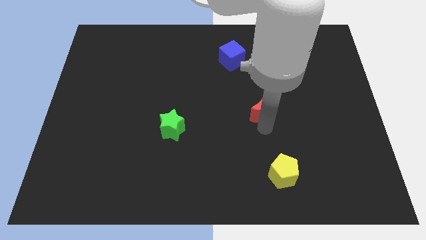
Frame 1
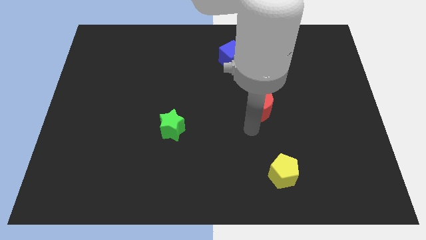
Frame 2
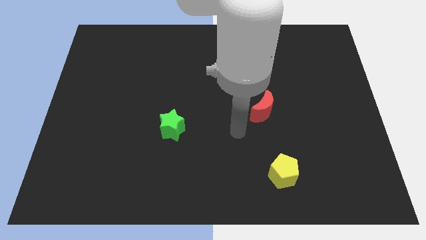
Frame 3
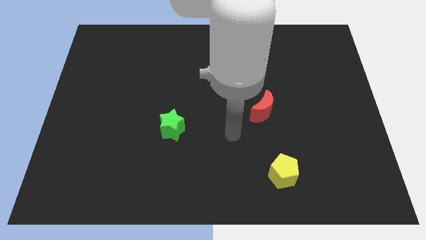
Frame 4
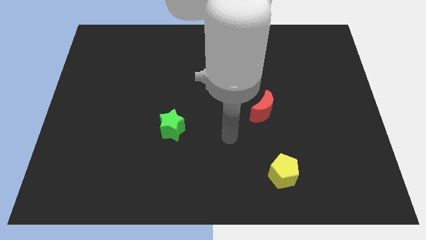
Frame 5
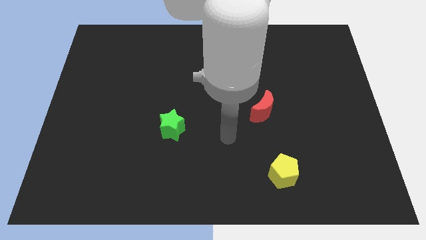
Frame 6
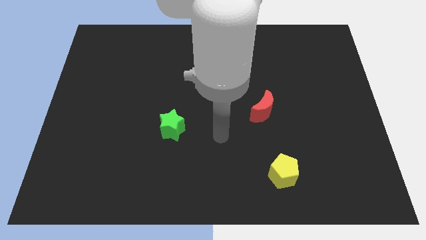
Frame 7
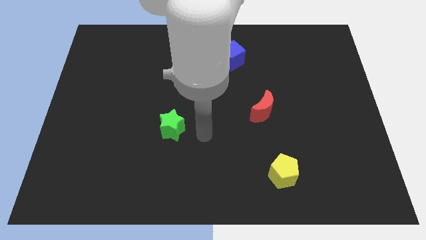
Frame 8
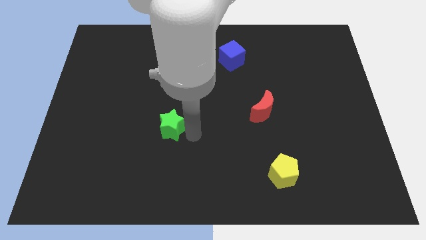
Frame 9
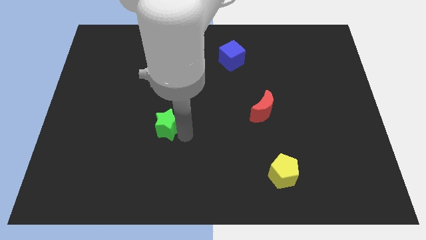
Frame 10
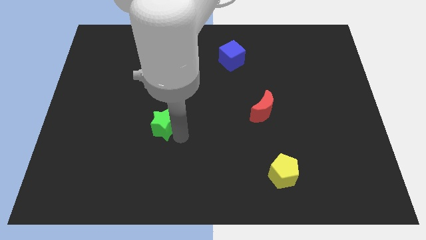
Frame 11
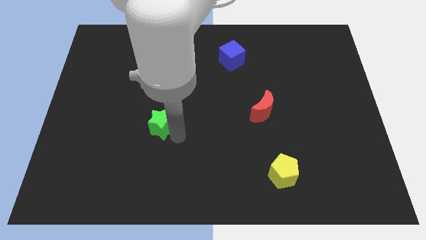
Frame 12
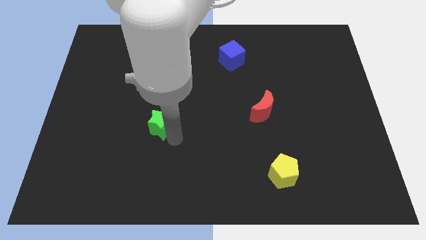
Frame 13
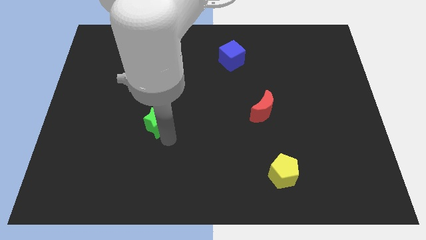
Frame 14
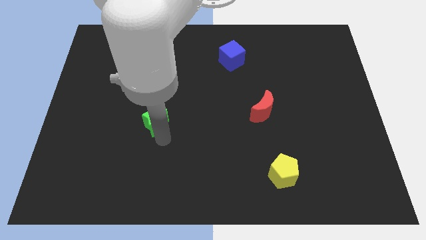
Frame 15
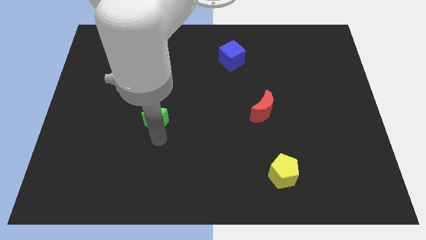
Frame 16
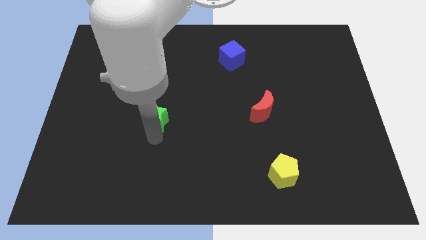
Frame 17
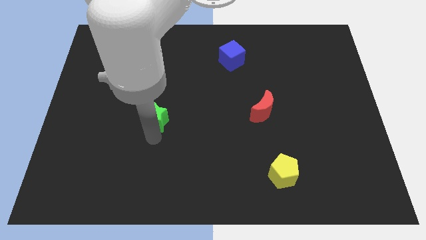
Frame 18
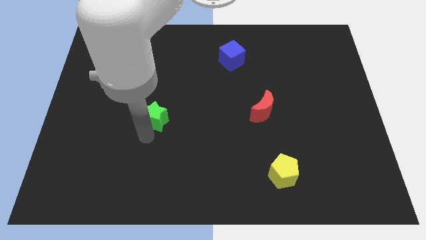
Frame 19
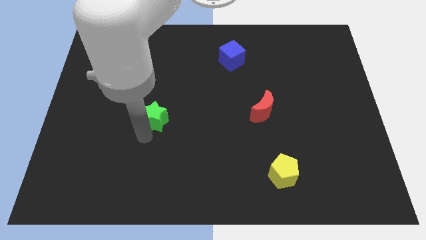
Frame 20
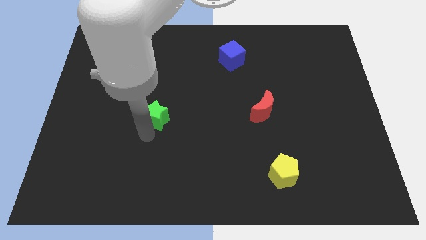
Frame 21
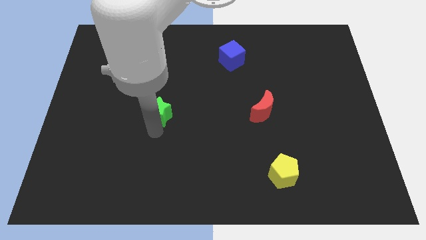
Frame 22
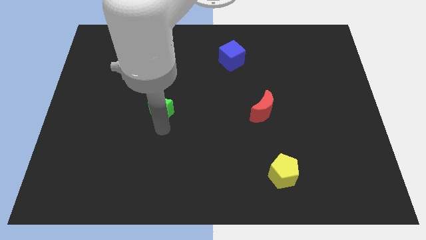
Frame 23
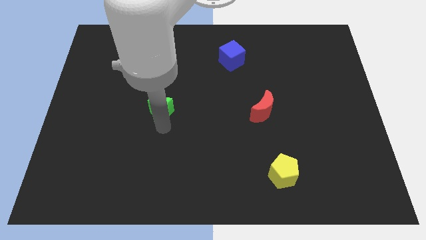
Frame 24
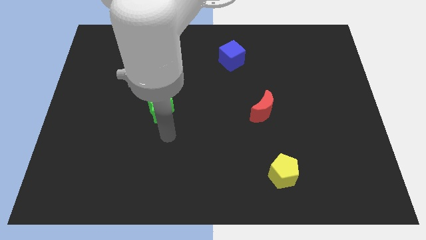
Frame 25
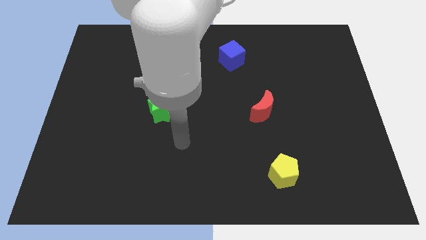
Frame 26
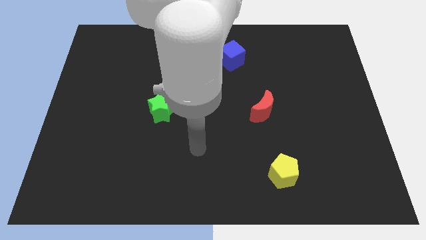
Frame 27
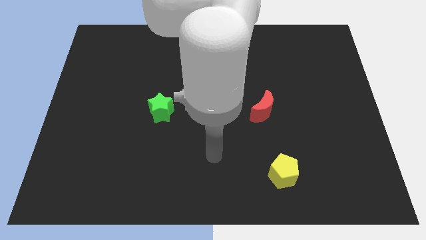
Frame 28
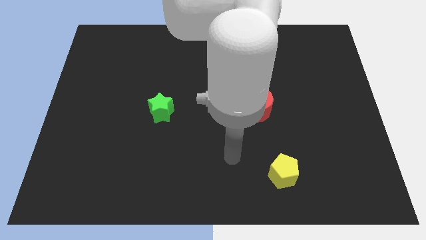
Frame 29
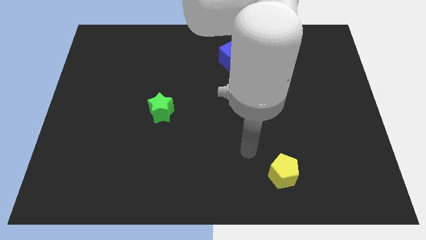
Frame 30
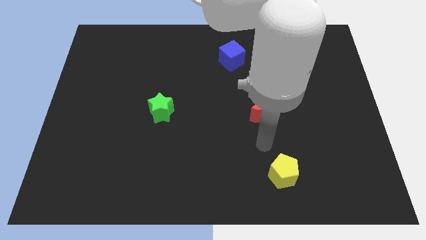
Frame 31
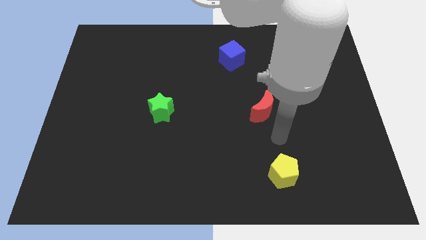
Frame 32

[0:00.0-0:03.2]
move the green star slightly towards the top side of the board

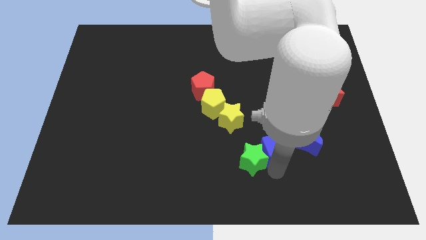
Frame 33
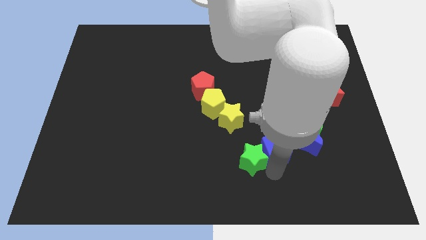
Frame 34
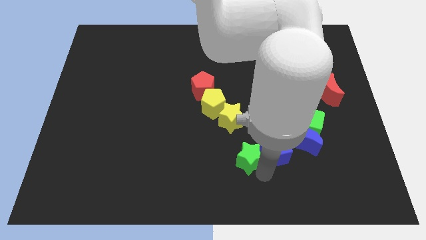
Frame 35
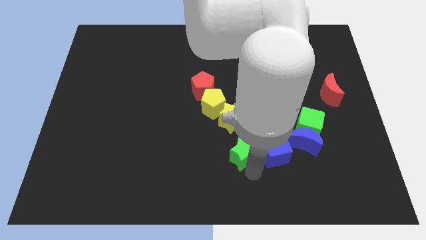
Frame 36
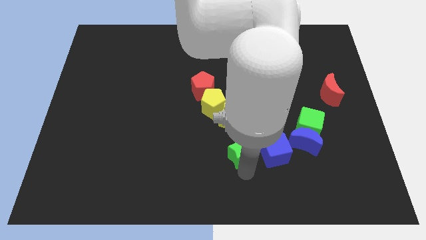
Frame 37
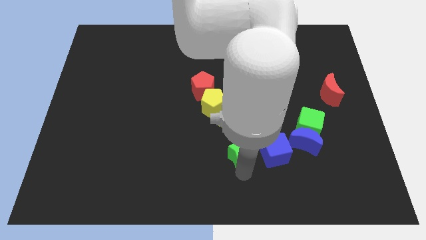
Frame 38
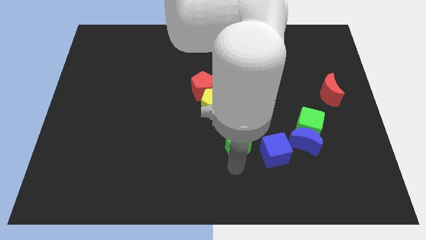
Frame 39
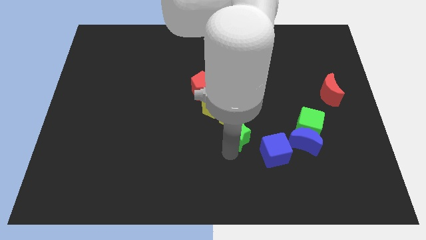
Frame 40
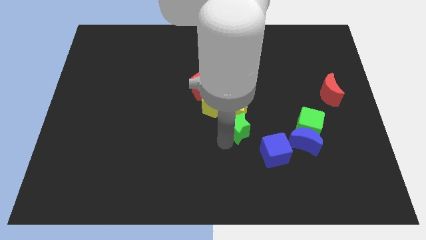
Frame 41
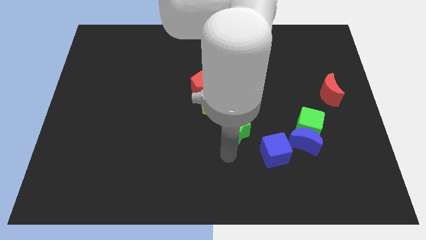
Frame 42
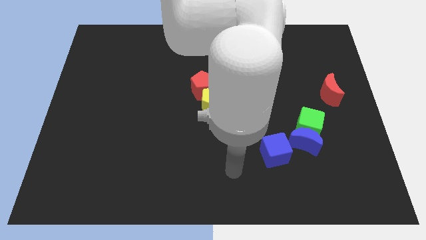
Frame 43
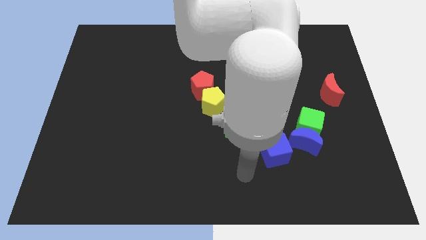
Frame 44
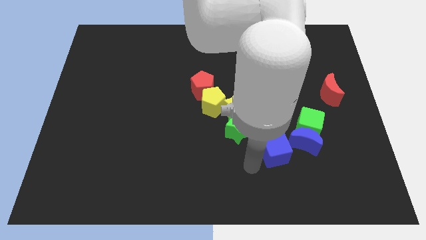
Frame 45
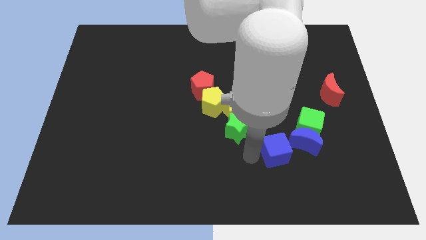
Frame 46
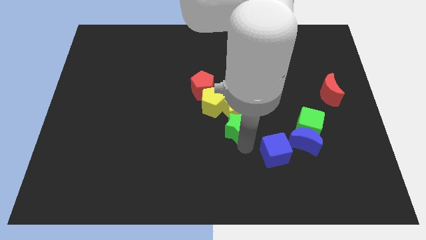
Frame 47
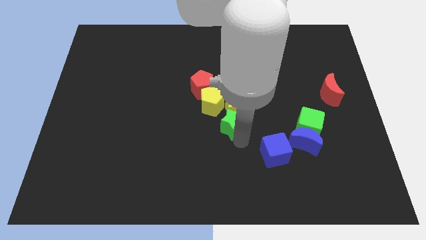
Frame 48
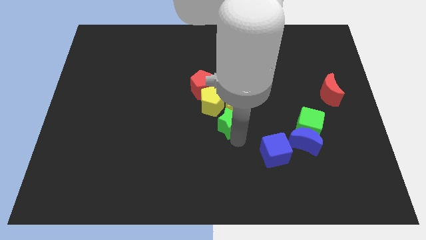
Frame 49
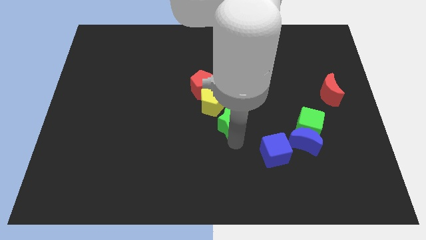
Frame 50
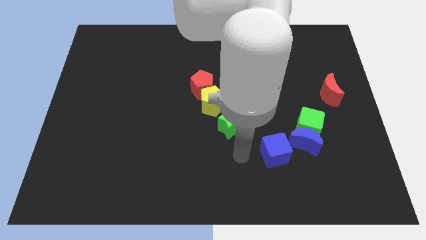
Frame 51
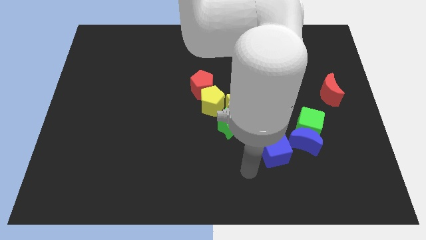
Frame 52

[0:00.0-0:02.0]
push the green star at the bottom of the yellow pentagon

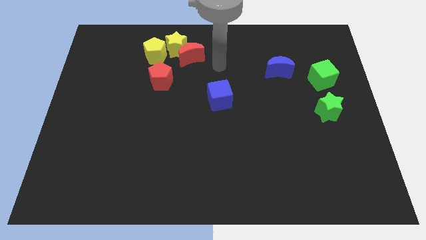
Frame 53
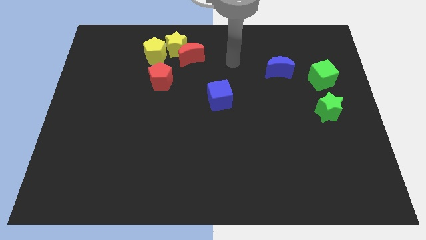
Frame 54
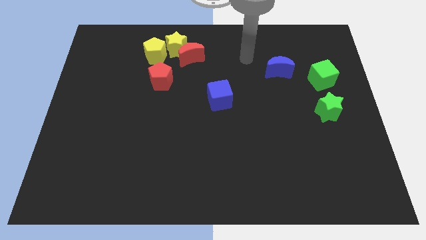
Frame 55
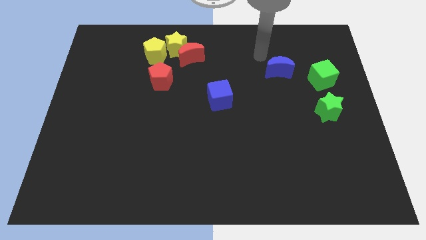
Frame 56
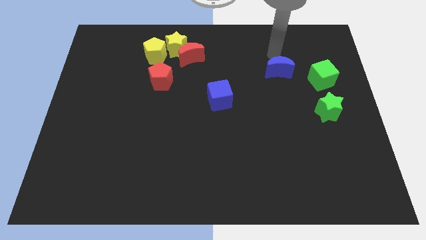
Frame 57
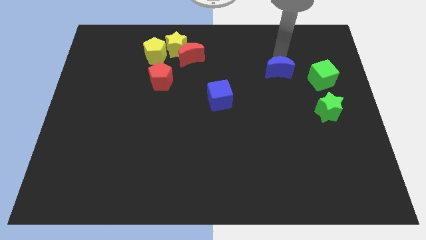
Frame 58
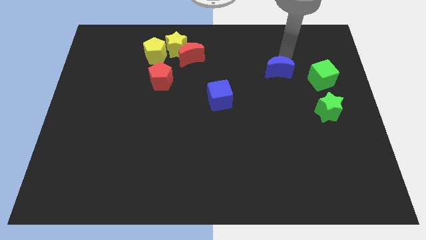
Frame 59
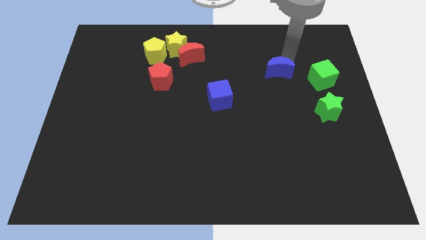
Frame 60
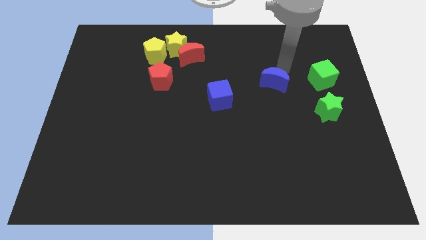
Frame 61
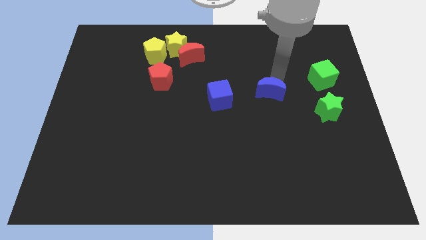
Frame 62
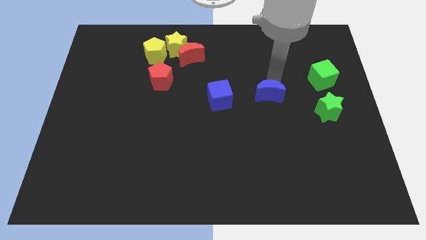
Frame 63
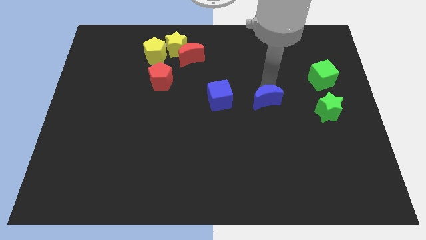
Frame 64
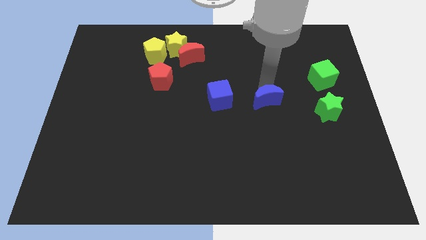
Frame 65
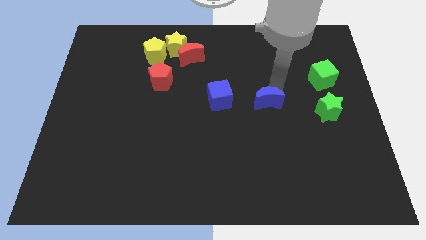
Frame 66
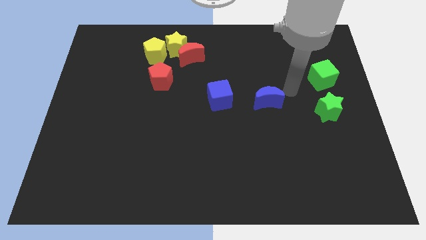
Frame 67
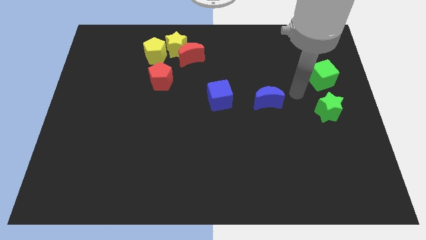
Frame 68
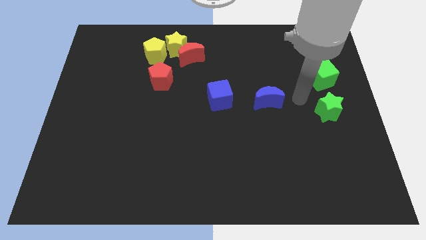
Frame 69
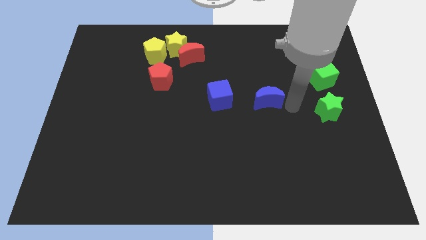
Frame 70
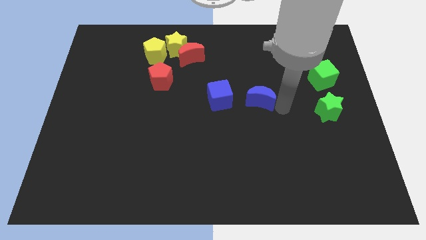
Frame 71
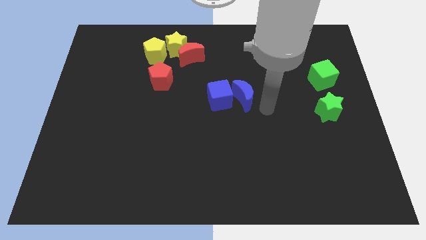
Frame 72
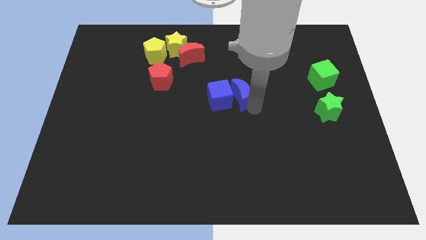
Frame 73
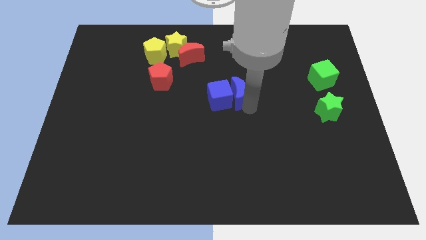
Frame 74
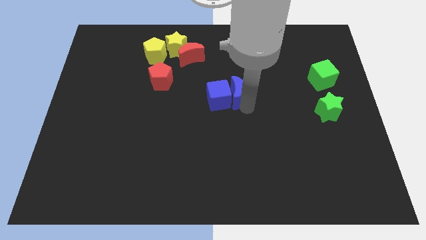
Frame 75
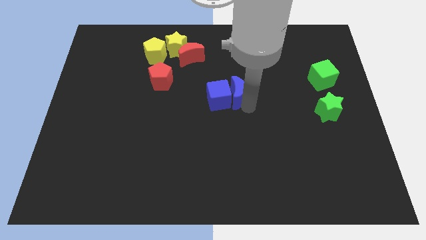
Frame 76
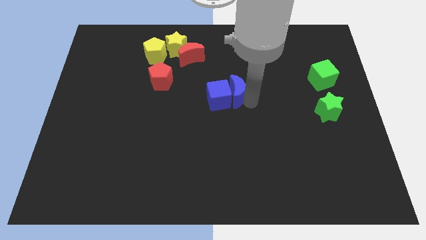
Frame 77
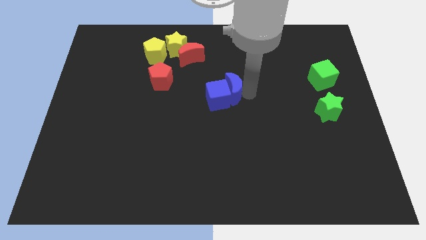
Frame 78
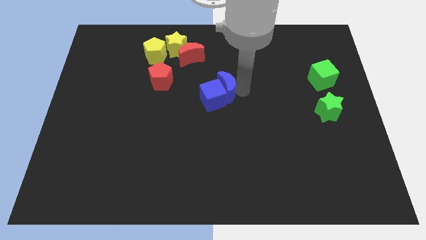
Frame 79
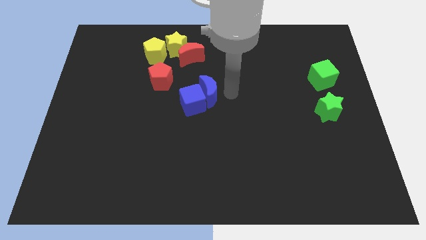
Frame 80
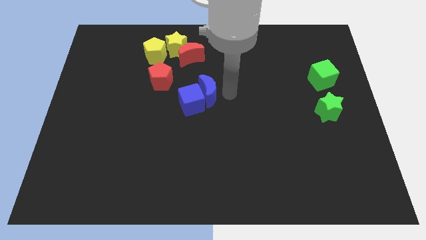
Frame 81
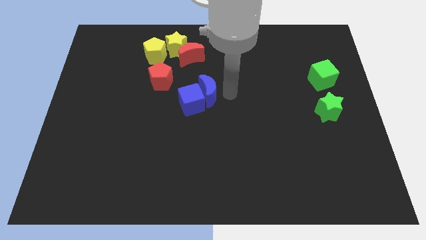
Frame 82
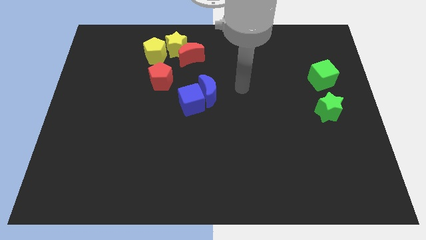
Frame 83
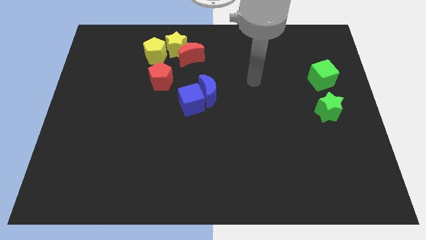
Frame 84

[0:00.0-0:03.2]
move the blue crescent into the blue cube

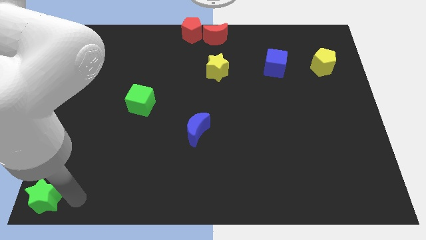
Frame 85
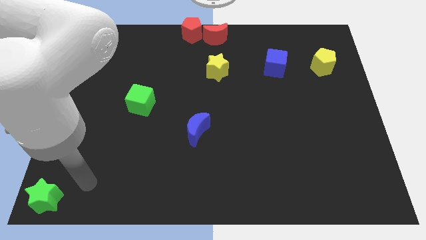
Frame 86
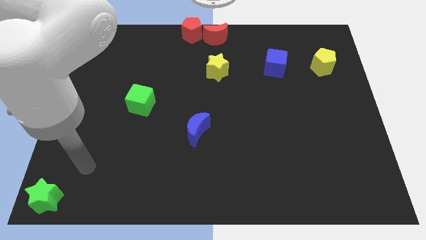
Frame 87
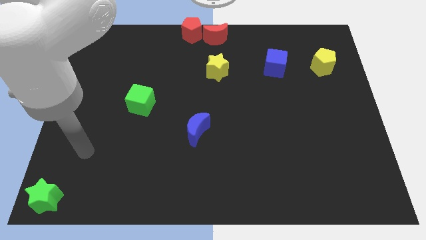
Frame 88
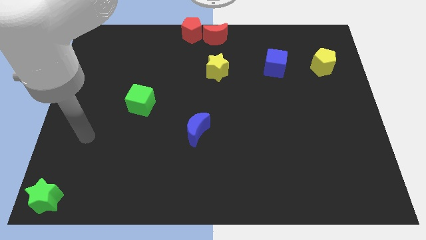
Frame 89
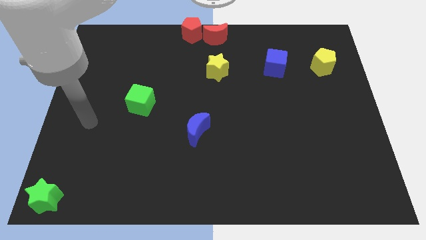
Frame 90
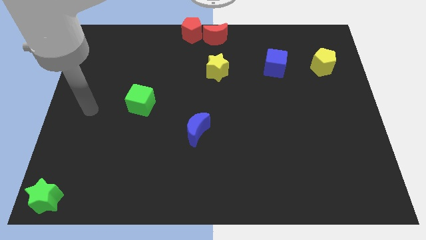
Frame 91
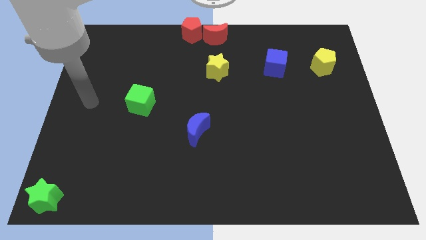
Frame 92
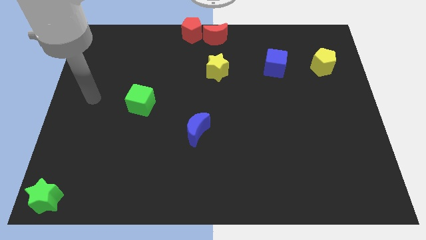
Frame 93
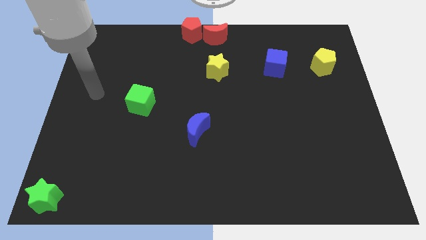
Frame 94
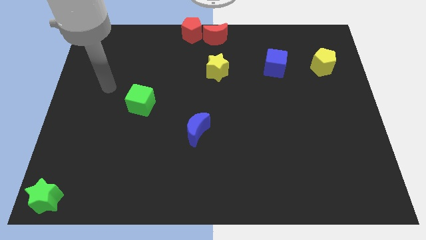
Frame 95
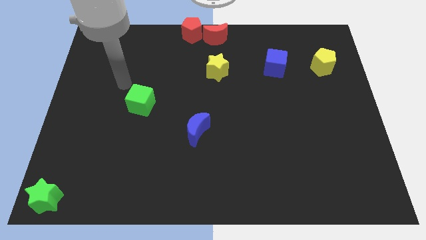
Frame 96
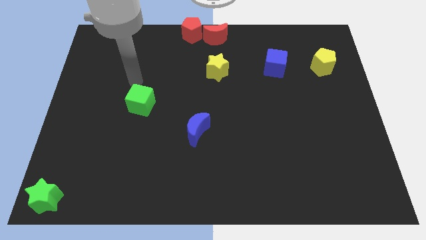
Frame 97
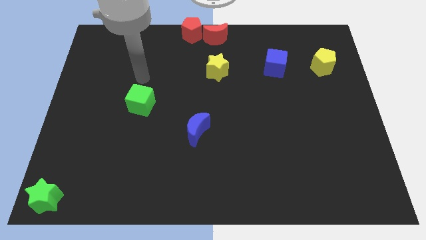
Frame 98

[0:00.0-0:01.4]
move your arm to the top of green cube
